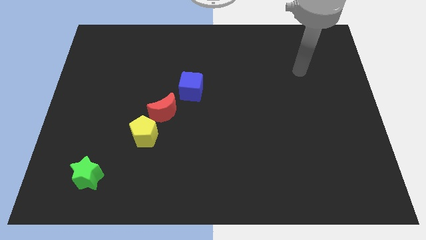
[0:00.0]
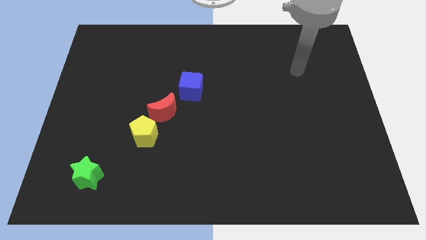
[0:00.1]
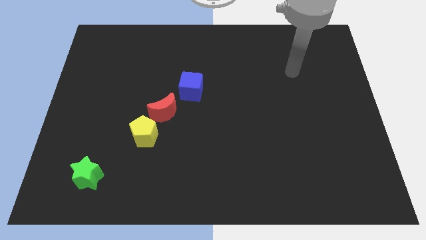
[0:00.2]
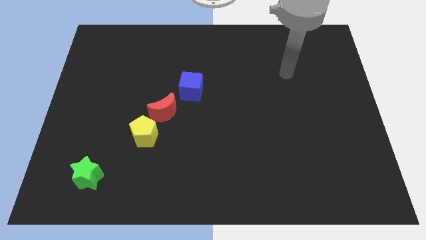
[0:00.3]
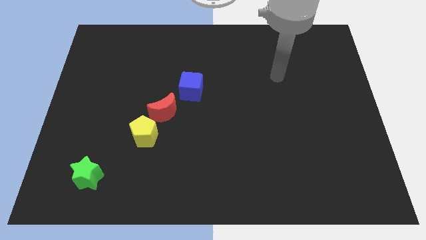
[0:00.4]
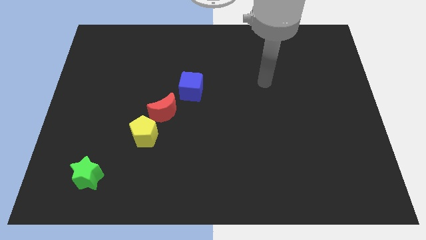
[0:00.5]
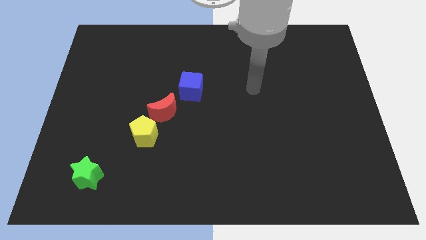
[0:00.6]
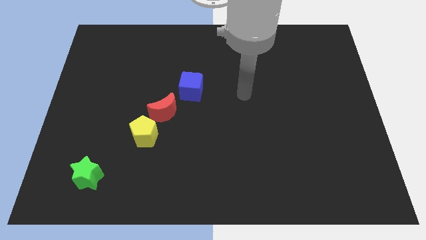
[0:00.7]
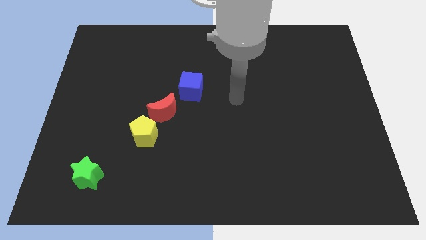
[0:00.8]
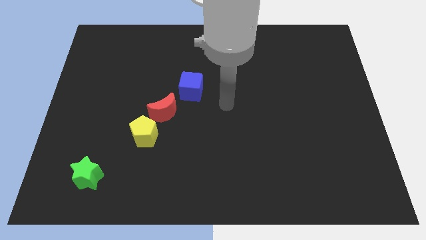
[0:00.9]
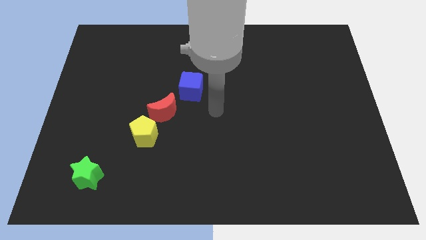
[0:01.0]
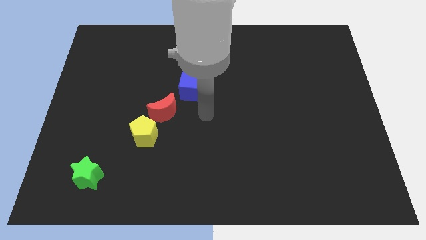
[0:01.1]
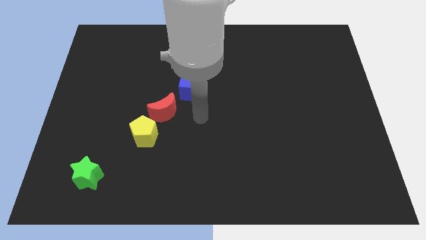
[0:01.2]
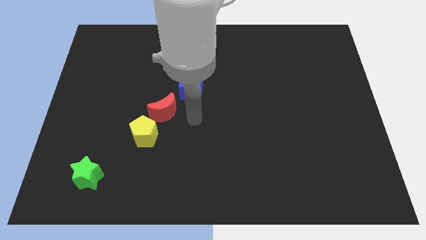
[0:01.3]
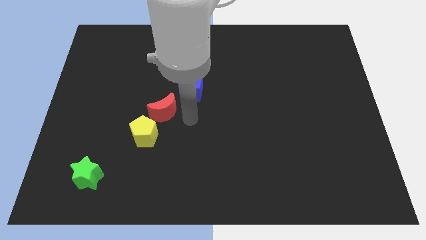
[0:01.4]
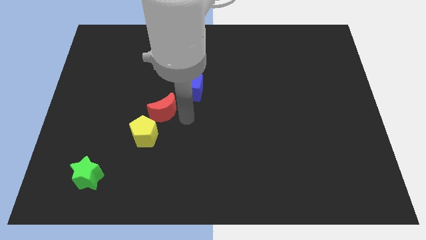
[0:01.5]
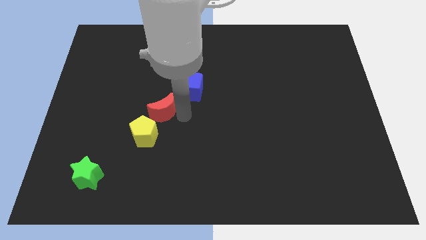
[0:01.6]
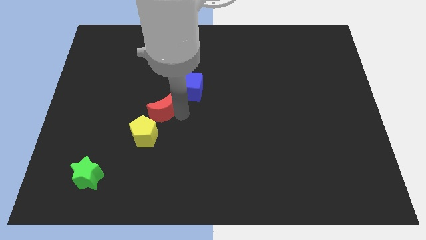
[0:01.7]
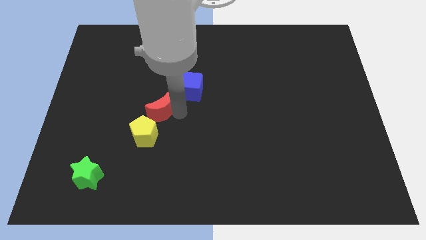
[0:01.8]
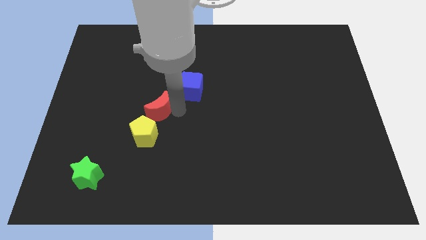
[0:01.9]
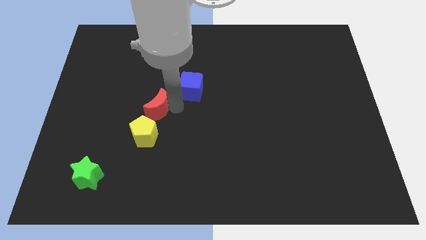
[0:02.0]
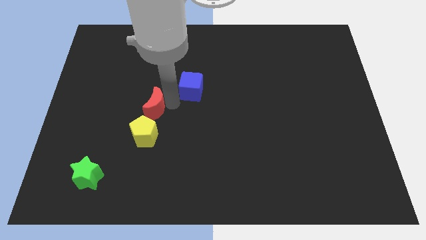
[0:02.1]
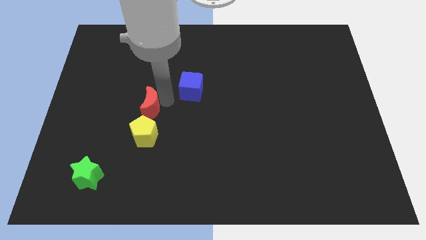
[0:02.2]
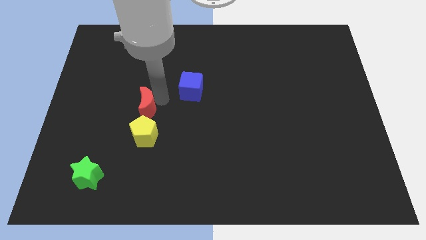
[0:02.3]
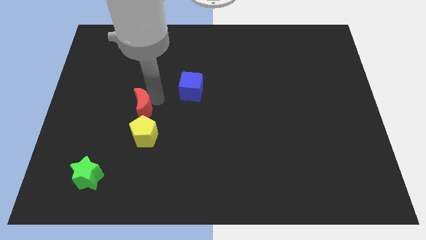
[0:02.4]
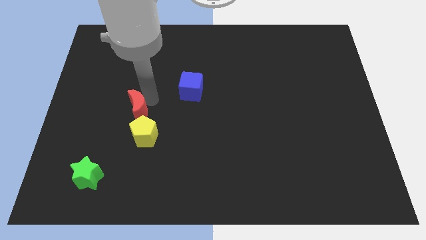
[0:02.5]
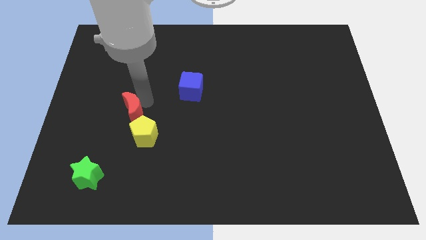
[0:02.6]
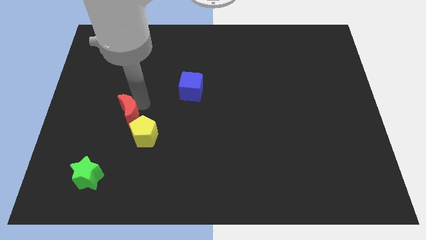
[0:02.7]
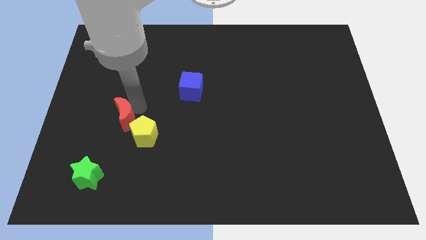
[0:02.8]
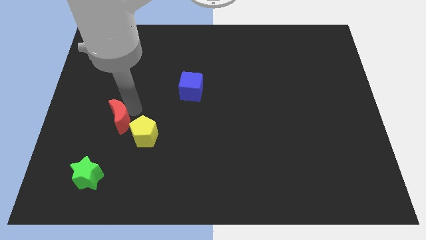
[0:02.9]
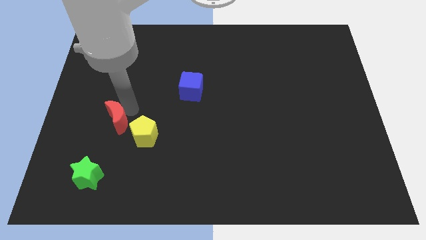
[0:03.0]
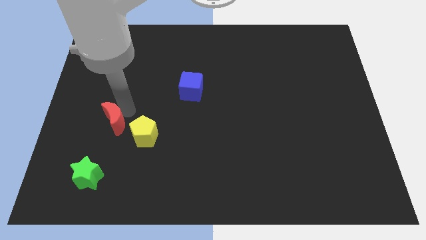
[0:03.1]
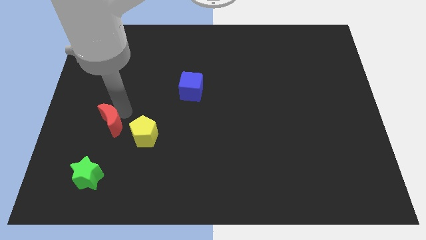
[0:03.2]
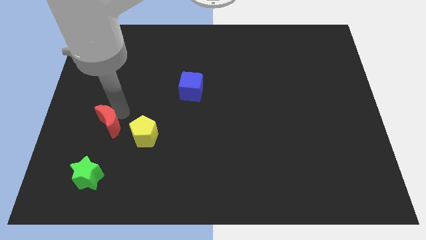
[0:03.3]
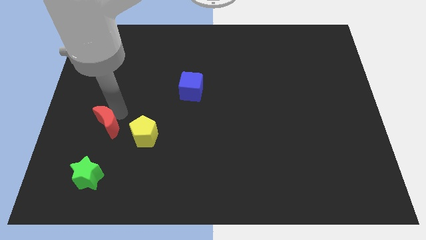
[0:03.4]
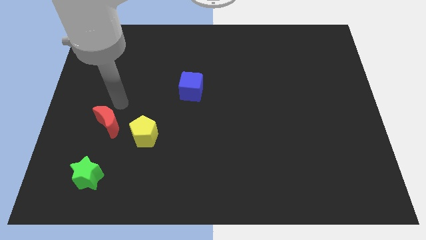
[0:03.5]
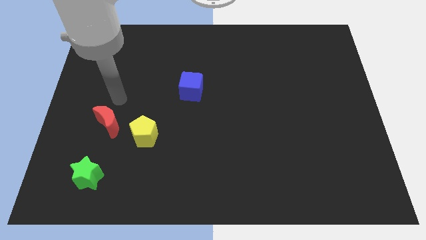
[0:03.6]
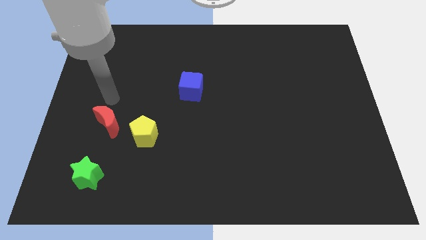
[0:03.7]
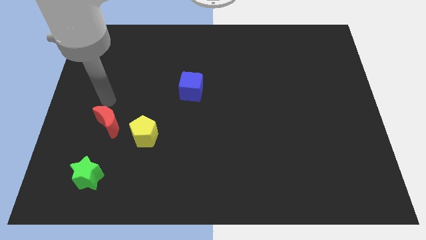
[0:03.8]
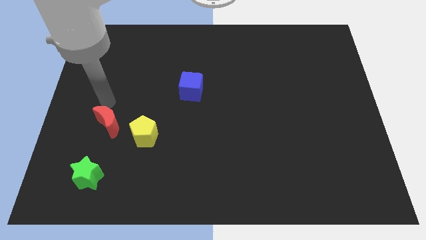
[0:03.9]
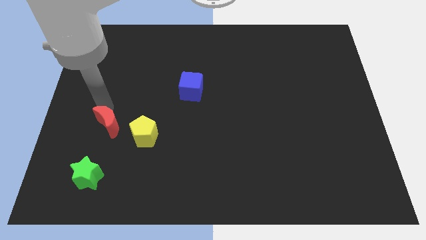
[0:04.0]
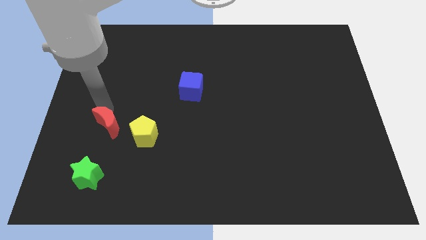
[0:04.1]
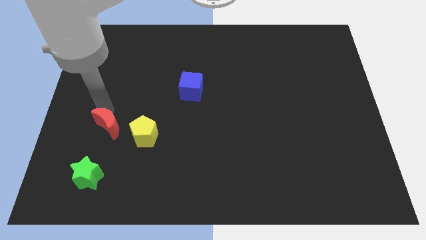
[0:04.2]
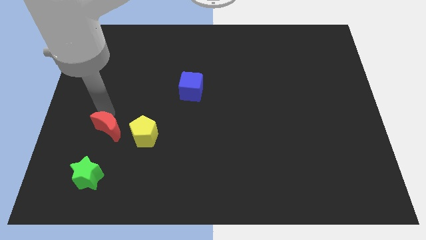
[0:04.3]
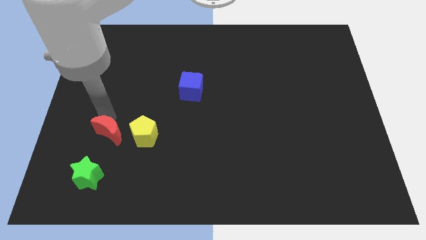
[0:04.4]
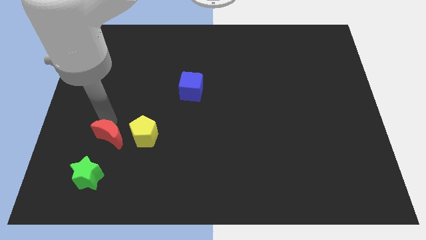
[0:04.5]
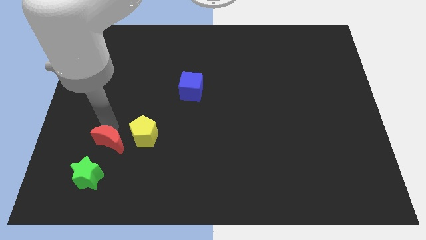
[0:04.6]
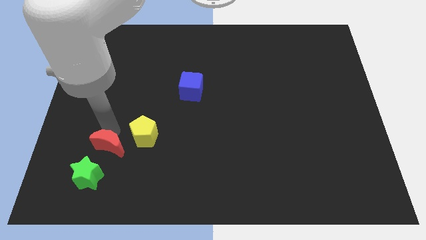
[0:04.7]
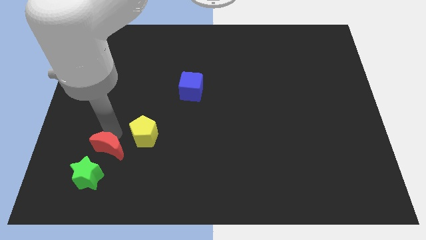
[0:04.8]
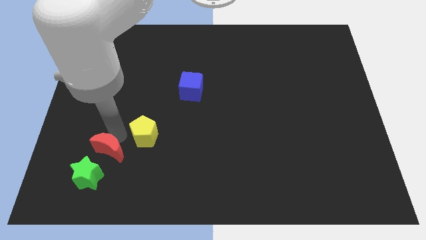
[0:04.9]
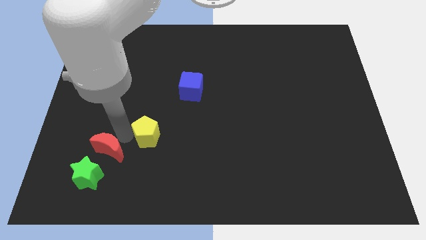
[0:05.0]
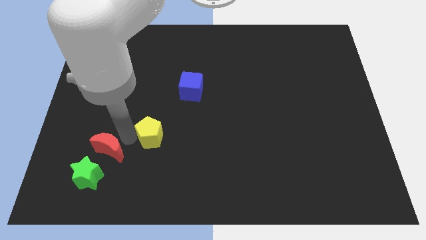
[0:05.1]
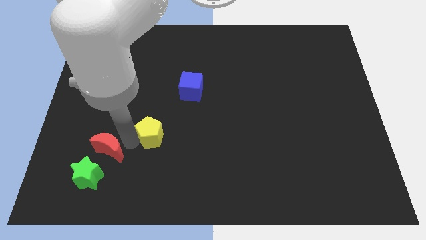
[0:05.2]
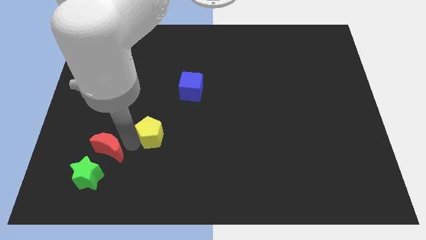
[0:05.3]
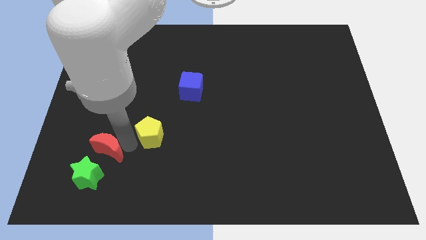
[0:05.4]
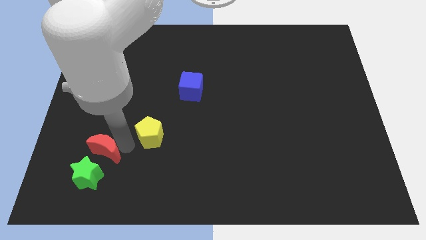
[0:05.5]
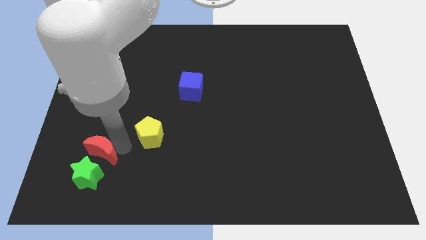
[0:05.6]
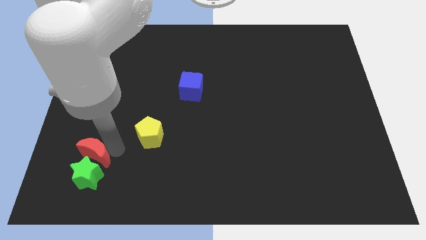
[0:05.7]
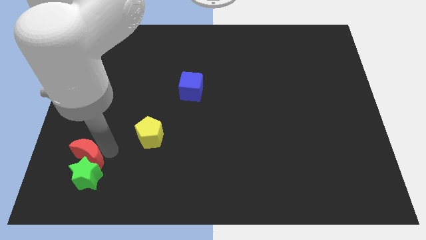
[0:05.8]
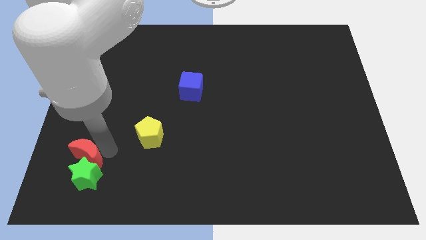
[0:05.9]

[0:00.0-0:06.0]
move the moon next to the star

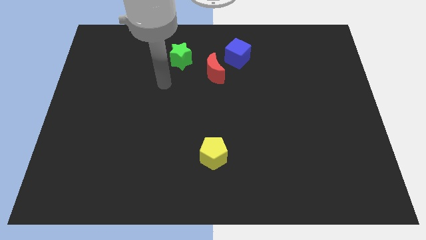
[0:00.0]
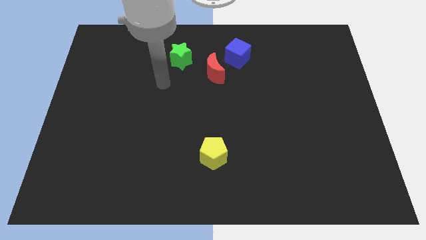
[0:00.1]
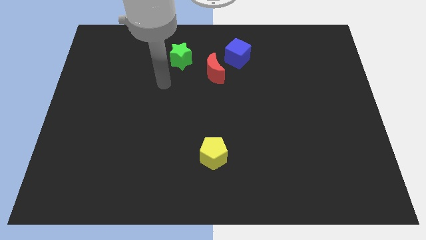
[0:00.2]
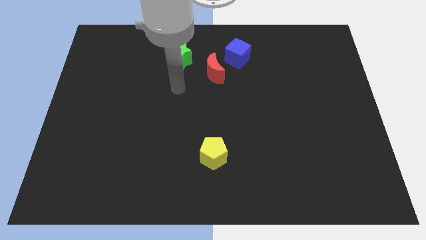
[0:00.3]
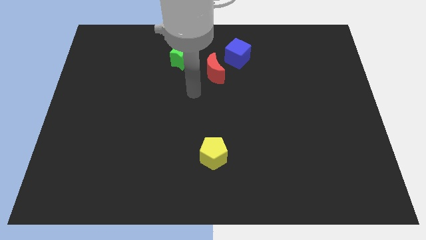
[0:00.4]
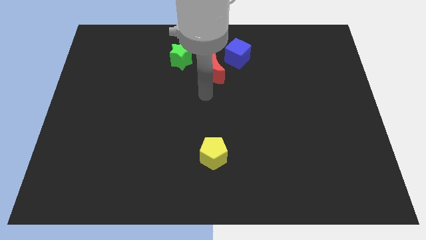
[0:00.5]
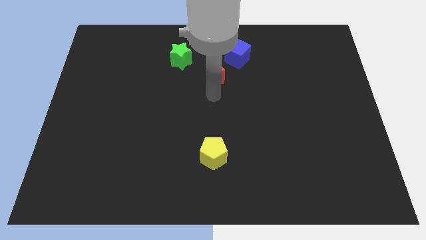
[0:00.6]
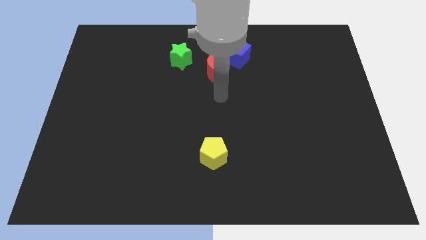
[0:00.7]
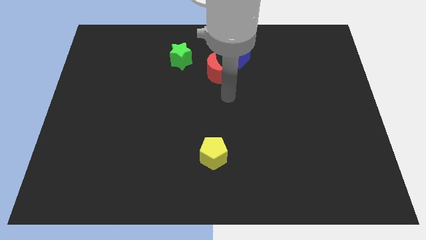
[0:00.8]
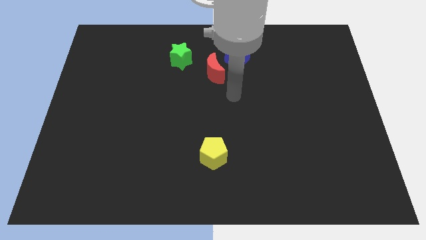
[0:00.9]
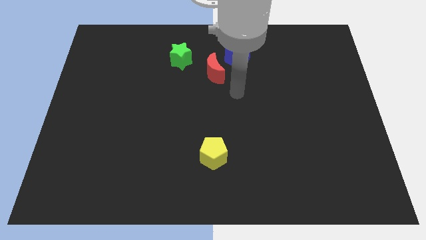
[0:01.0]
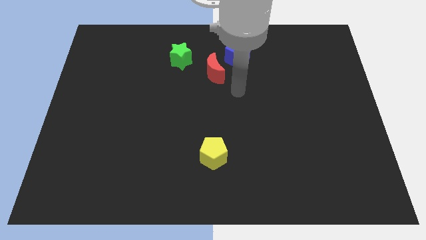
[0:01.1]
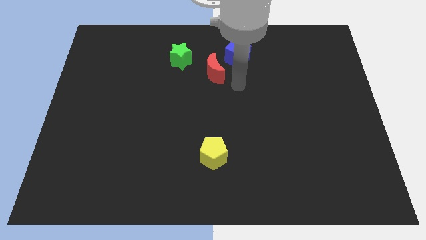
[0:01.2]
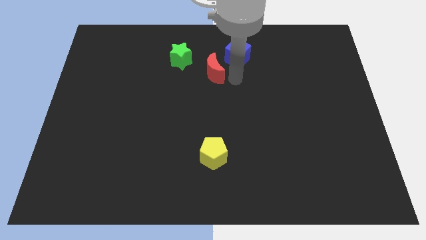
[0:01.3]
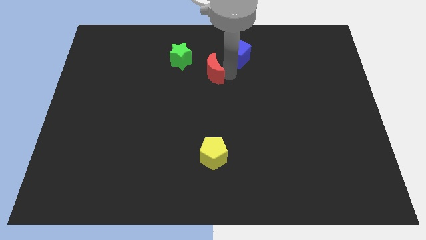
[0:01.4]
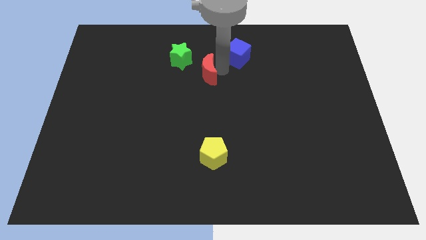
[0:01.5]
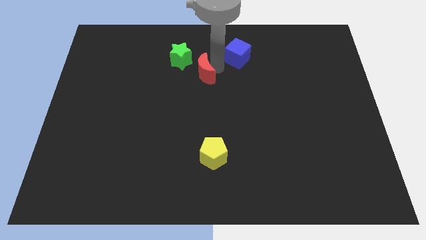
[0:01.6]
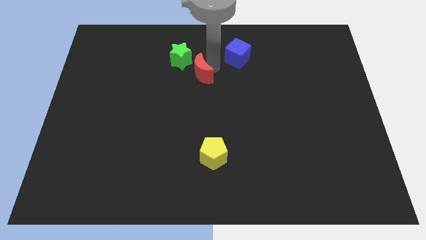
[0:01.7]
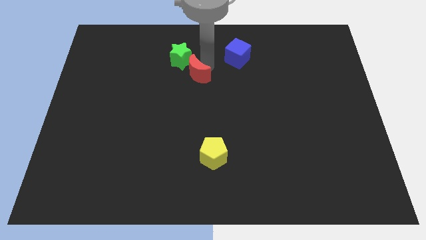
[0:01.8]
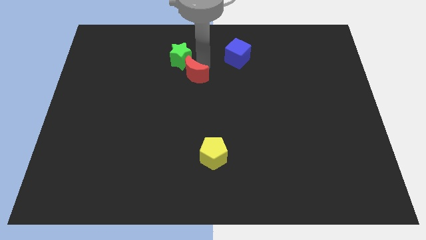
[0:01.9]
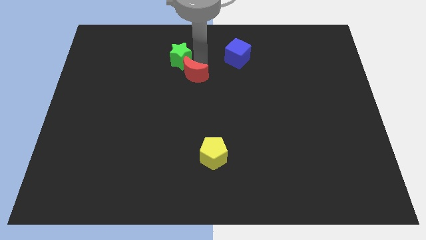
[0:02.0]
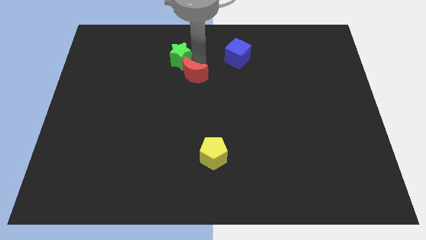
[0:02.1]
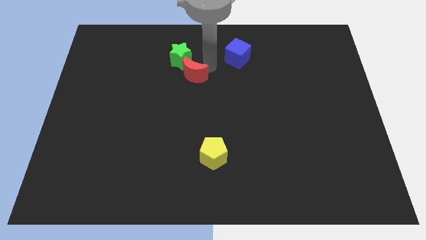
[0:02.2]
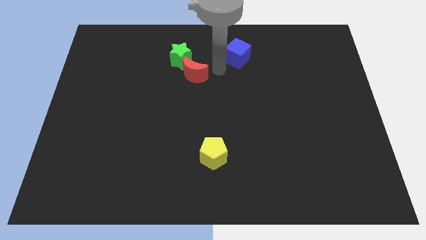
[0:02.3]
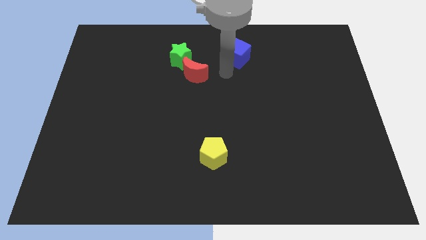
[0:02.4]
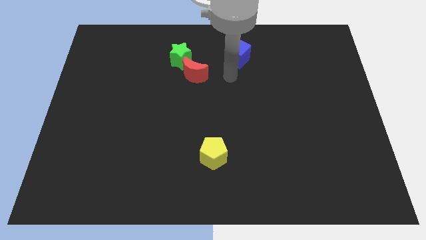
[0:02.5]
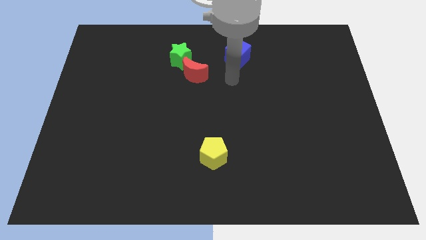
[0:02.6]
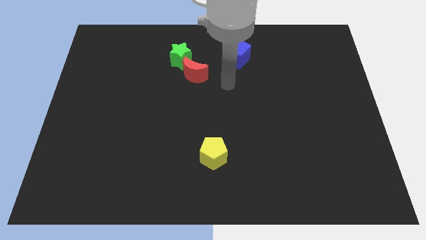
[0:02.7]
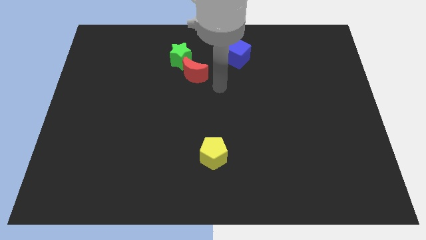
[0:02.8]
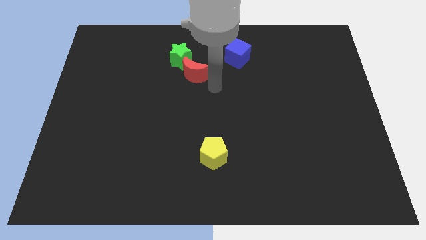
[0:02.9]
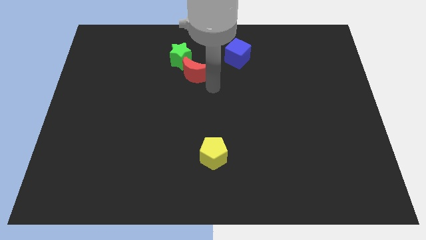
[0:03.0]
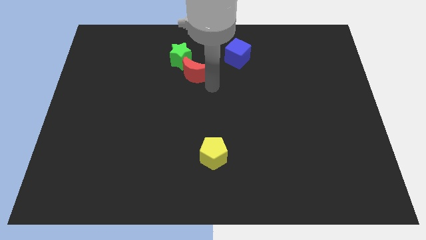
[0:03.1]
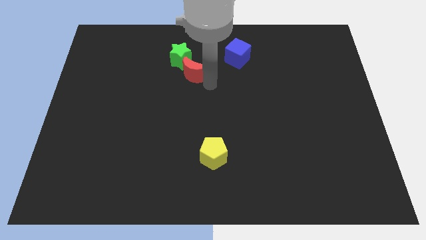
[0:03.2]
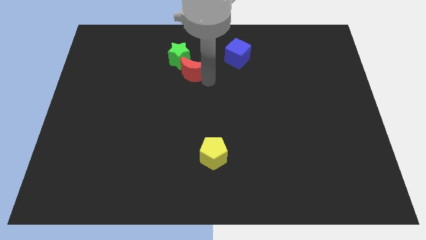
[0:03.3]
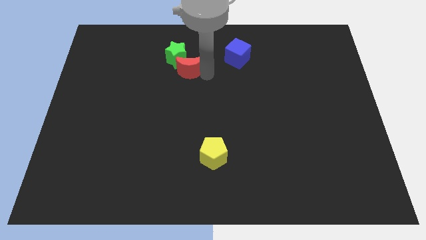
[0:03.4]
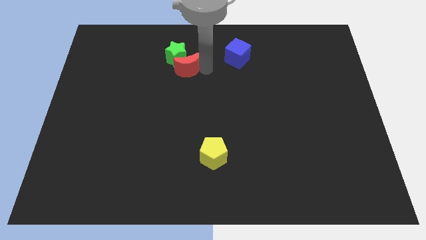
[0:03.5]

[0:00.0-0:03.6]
move the red moon towards the star
